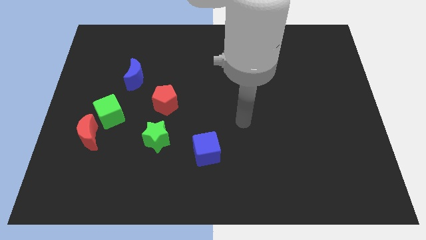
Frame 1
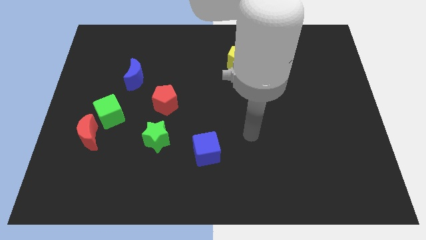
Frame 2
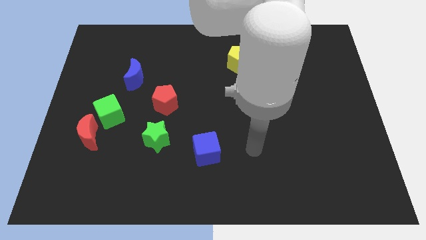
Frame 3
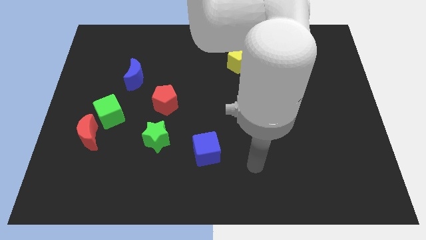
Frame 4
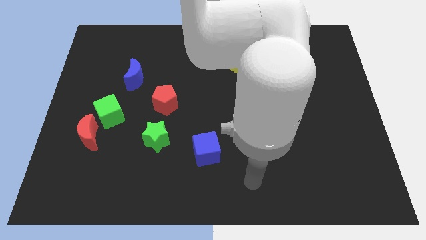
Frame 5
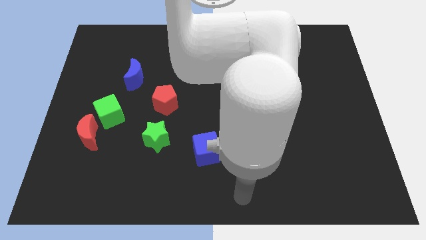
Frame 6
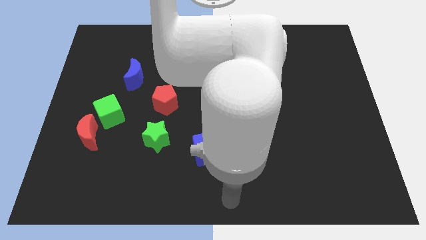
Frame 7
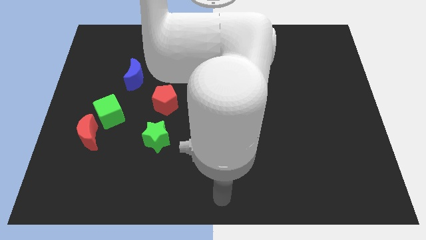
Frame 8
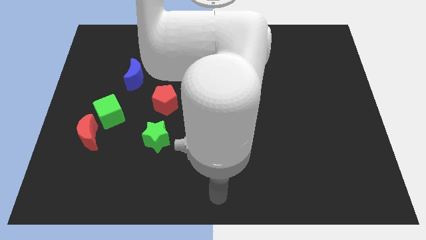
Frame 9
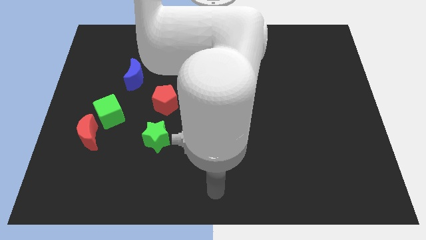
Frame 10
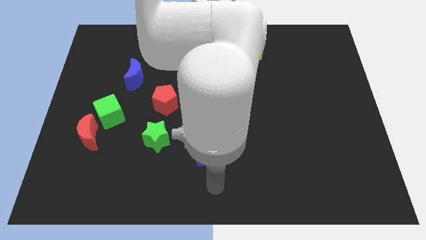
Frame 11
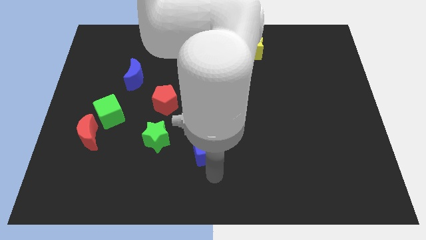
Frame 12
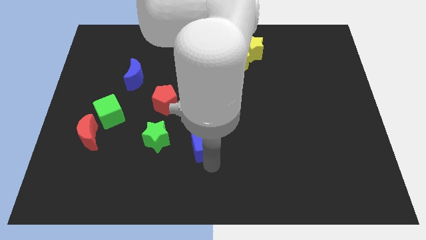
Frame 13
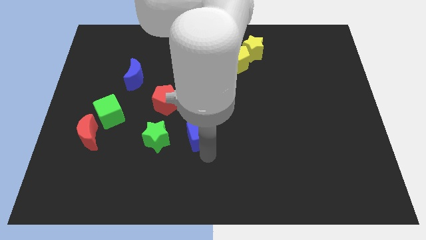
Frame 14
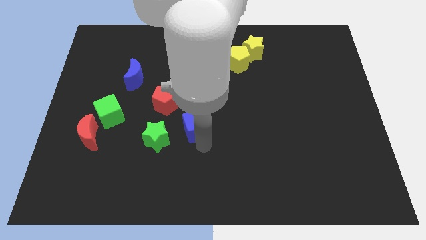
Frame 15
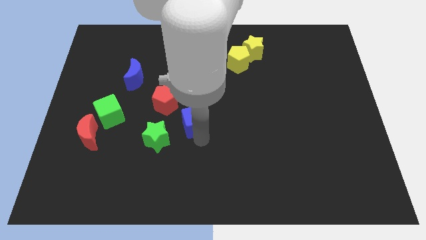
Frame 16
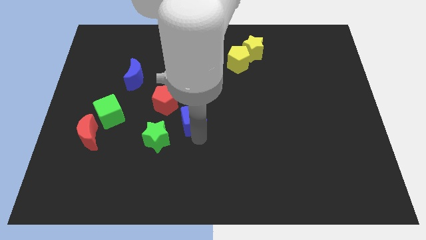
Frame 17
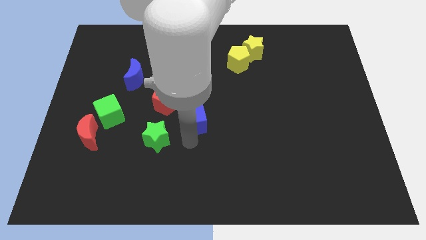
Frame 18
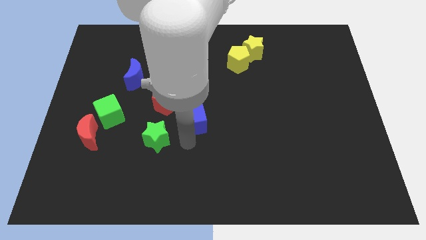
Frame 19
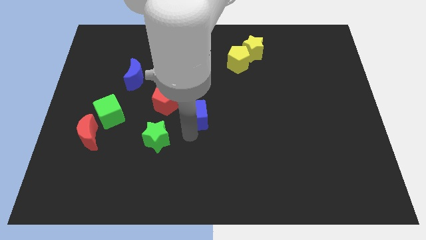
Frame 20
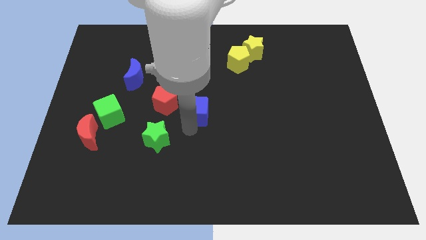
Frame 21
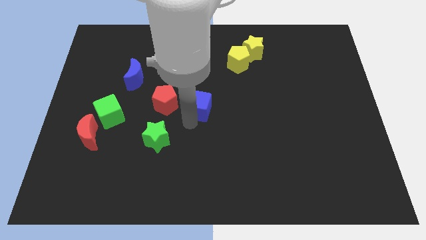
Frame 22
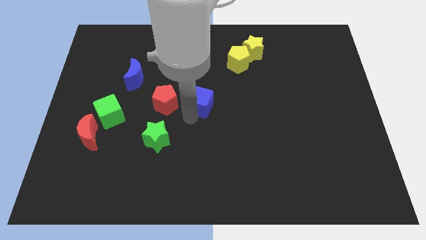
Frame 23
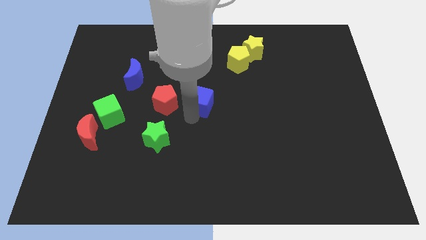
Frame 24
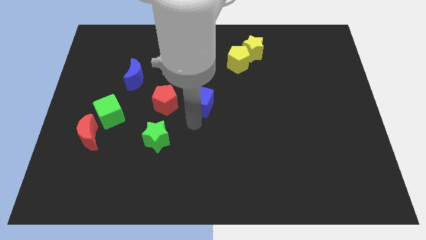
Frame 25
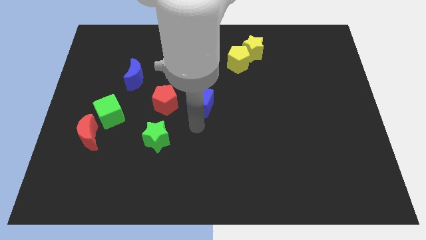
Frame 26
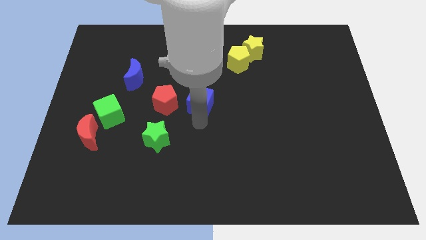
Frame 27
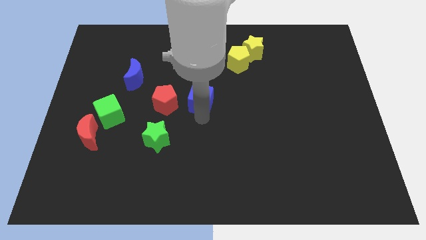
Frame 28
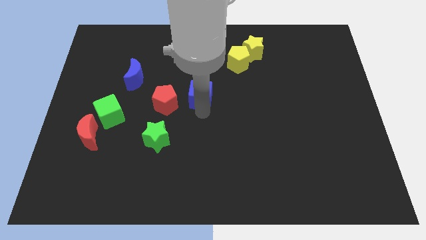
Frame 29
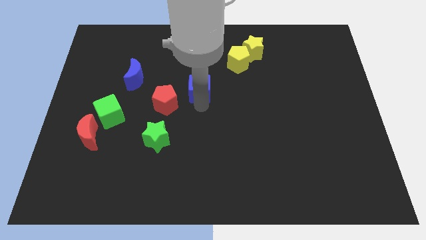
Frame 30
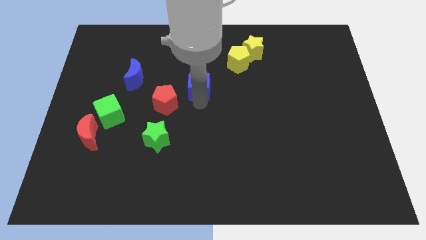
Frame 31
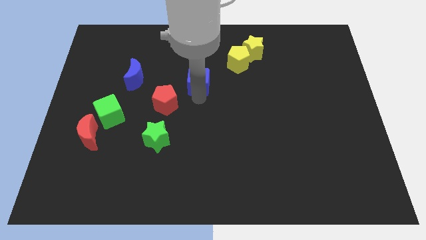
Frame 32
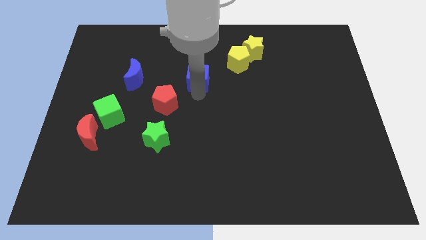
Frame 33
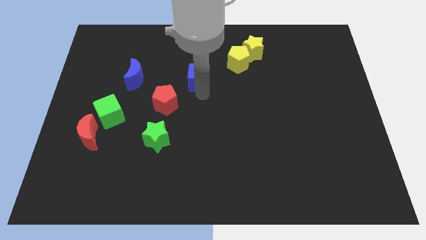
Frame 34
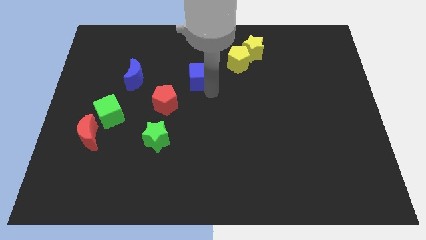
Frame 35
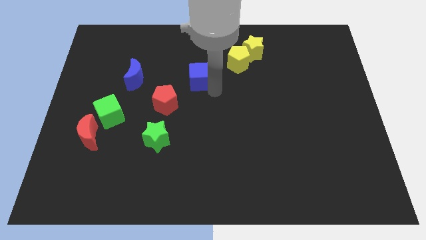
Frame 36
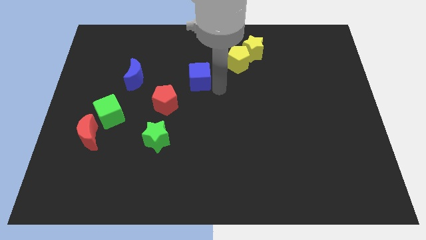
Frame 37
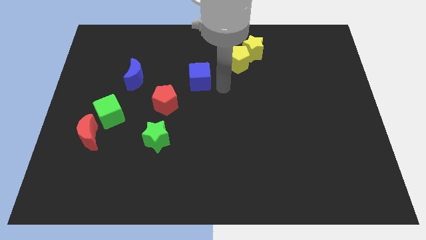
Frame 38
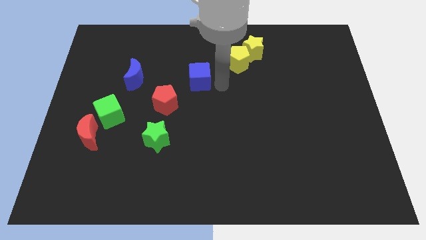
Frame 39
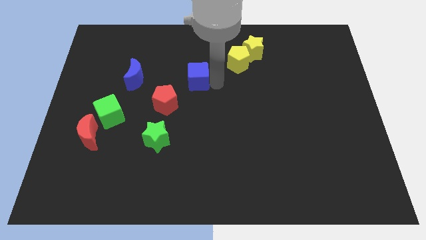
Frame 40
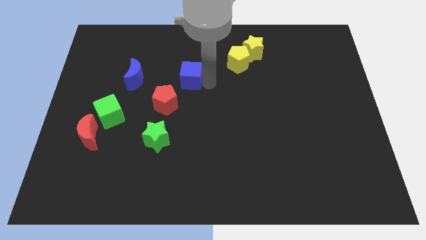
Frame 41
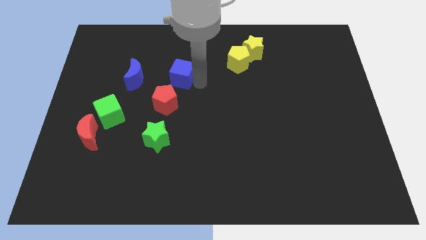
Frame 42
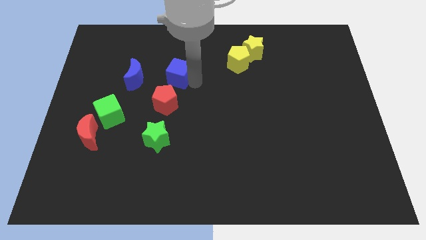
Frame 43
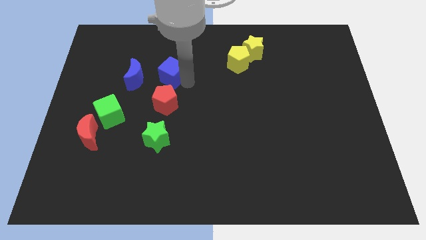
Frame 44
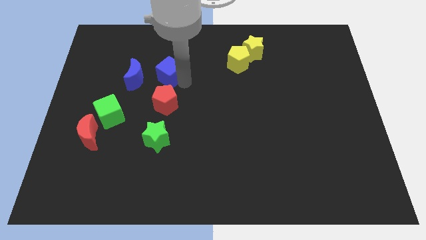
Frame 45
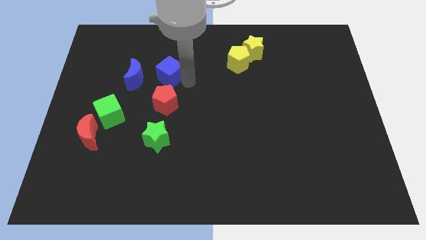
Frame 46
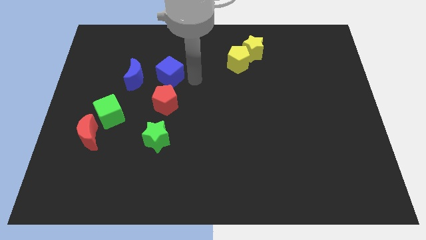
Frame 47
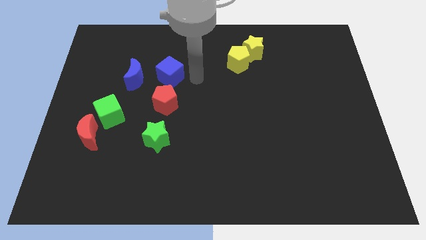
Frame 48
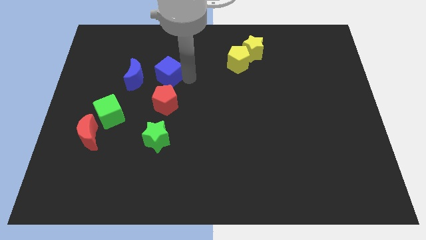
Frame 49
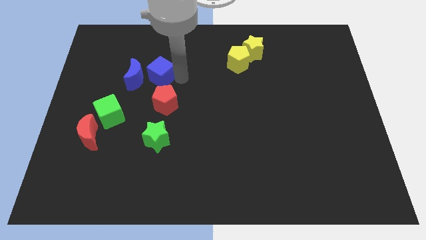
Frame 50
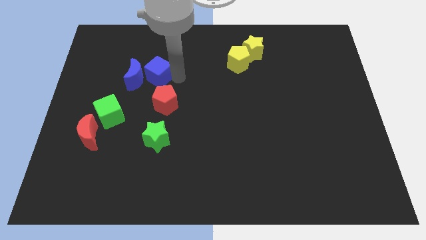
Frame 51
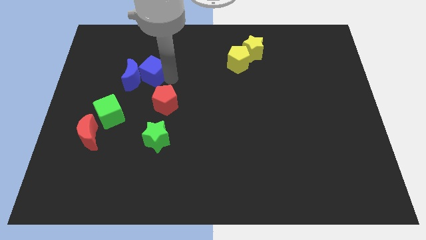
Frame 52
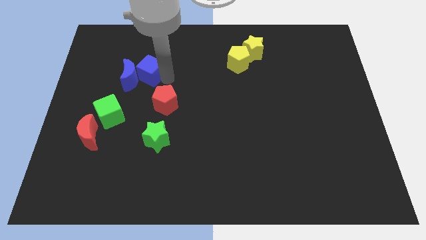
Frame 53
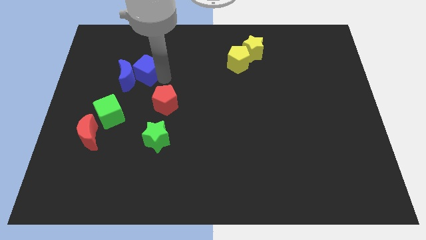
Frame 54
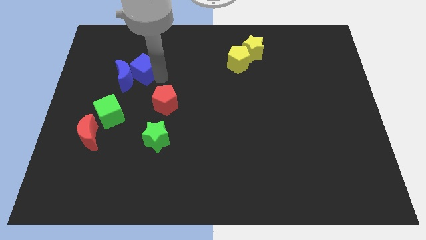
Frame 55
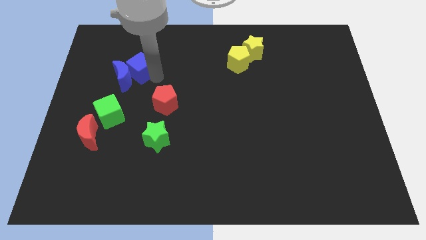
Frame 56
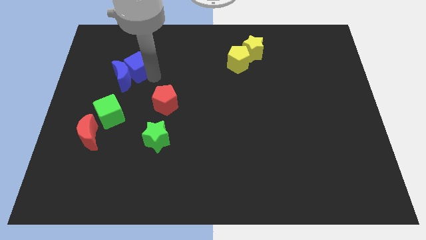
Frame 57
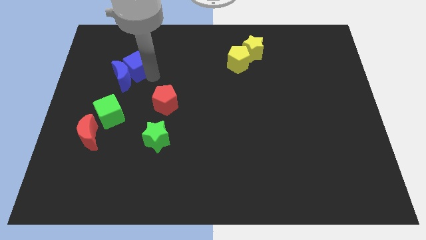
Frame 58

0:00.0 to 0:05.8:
group up the blue blocks at the tpo side of the green cube

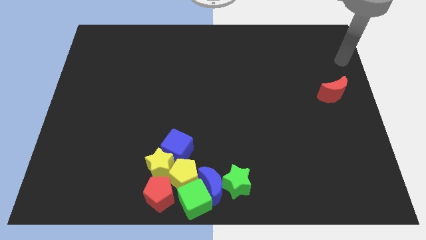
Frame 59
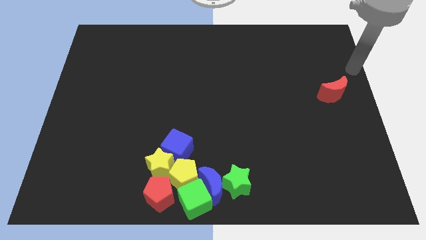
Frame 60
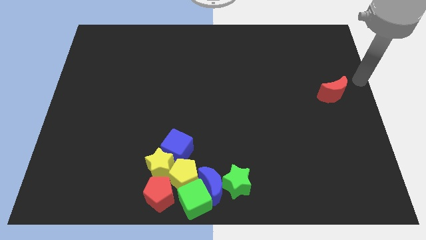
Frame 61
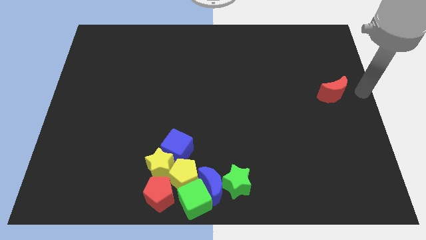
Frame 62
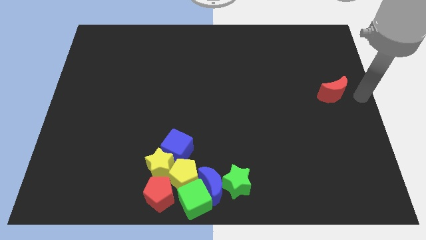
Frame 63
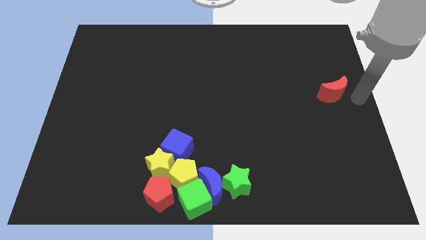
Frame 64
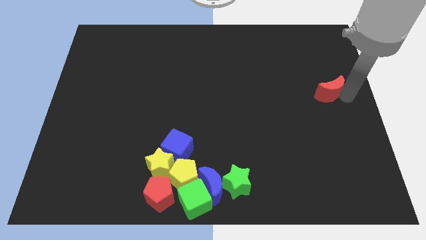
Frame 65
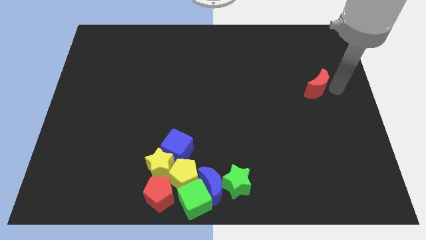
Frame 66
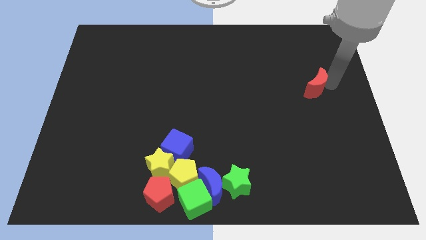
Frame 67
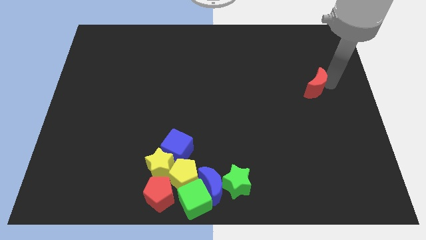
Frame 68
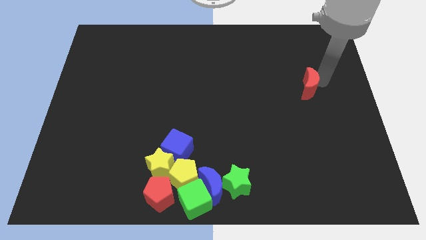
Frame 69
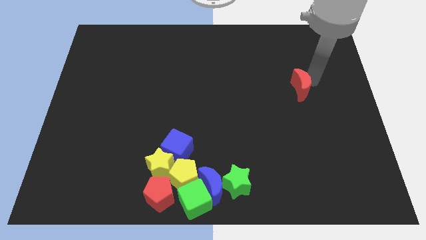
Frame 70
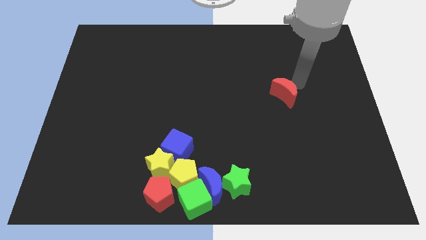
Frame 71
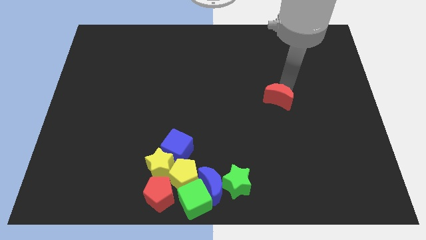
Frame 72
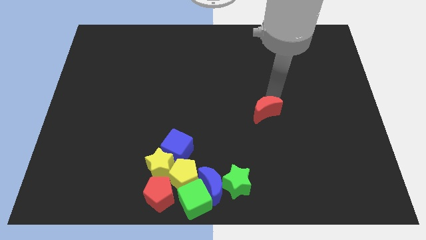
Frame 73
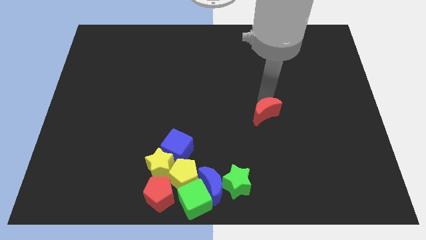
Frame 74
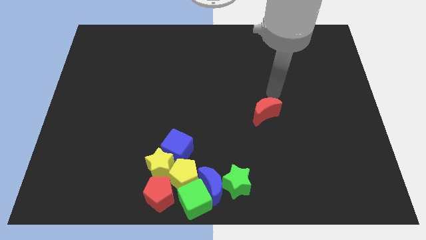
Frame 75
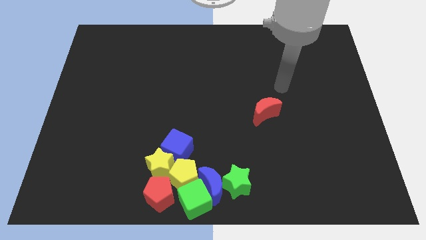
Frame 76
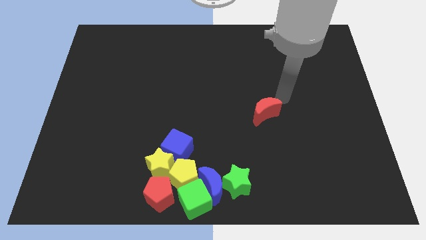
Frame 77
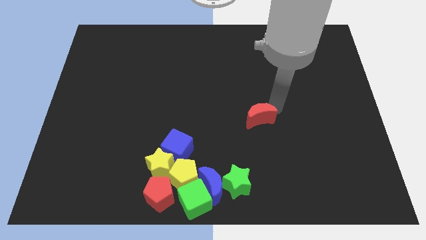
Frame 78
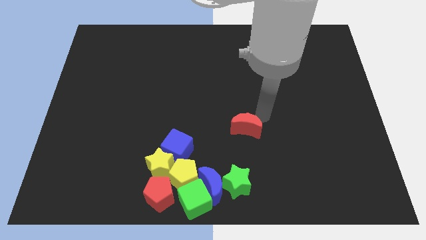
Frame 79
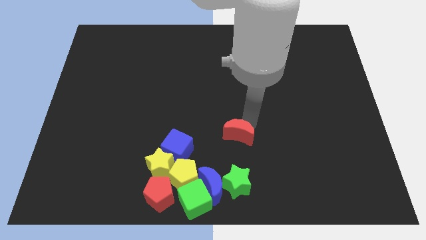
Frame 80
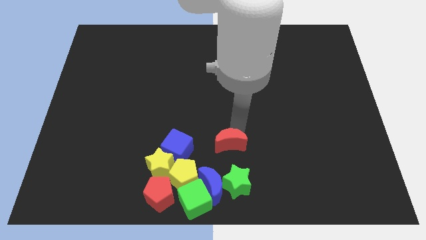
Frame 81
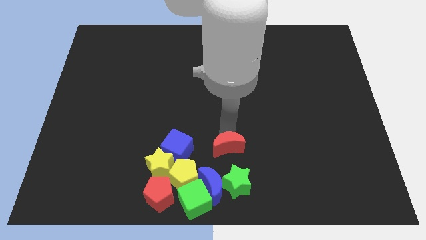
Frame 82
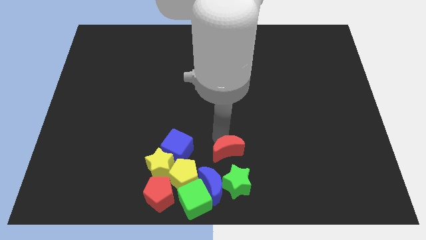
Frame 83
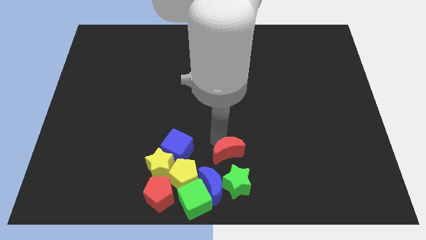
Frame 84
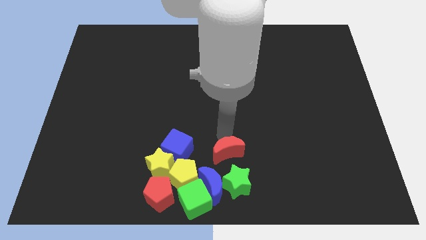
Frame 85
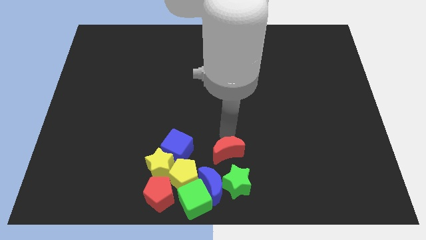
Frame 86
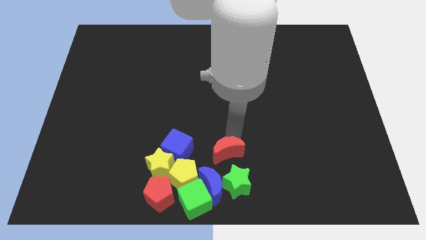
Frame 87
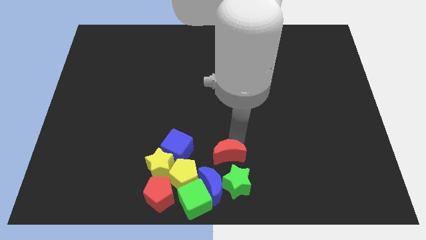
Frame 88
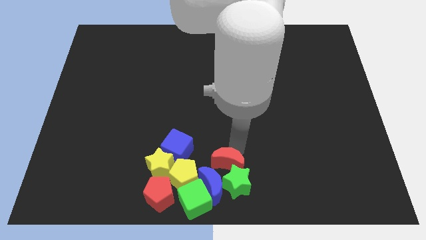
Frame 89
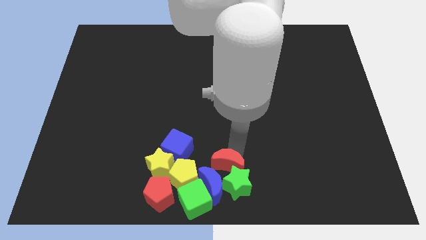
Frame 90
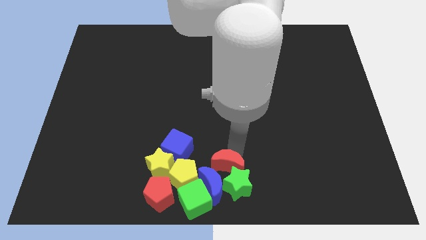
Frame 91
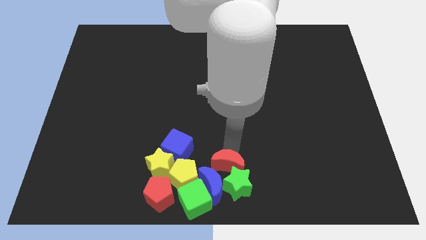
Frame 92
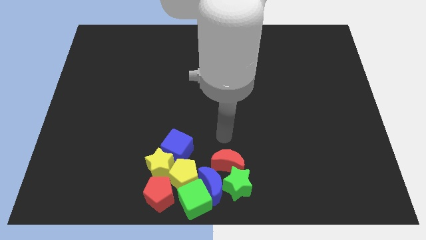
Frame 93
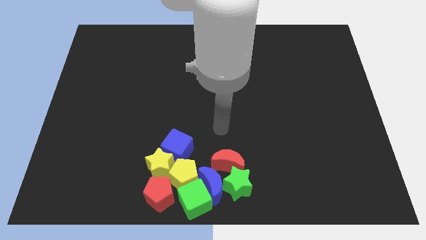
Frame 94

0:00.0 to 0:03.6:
push red moon towards group of blocks
